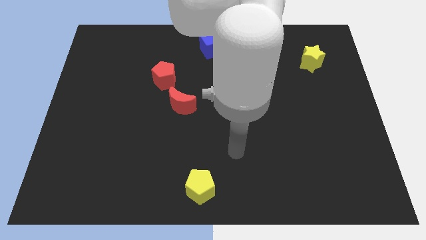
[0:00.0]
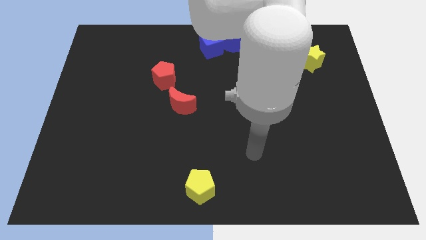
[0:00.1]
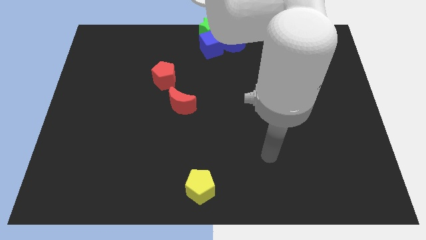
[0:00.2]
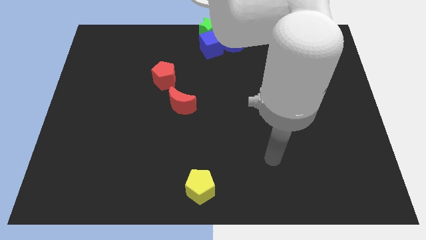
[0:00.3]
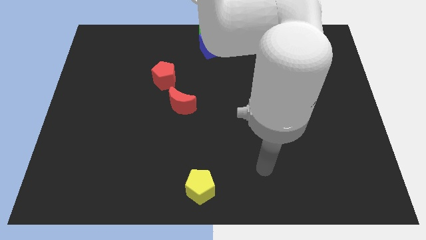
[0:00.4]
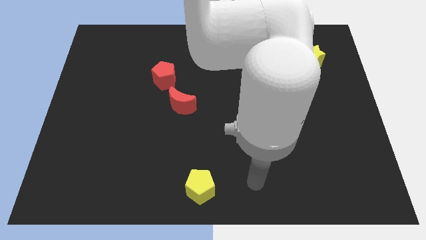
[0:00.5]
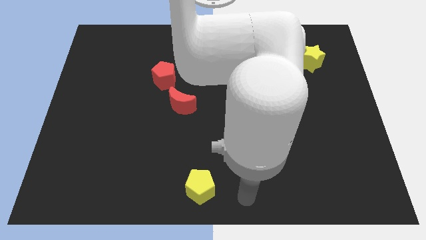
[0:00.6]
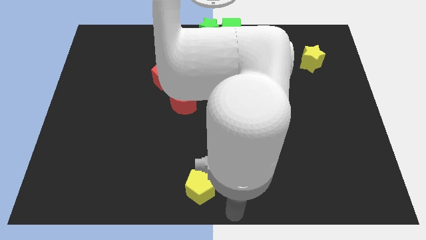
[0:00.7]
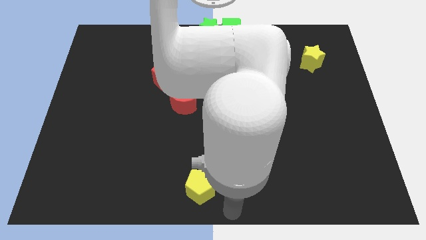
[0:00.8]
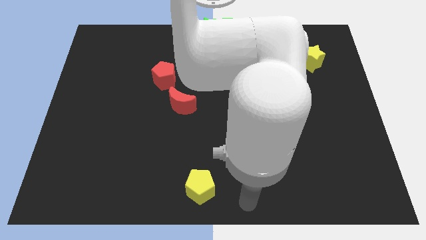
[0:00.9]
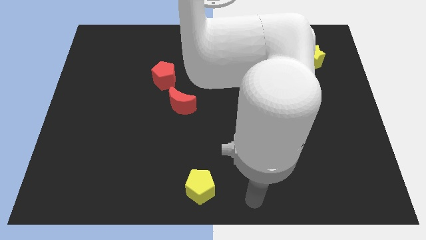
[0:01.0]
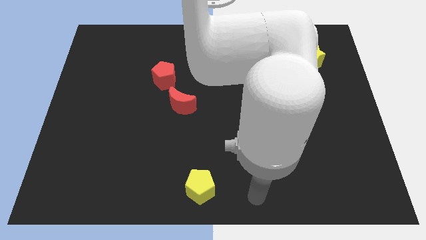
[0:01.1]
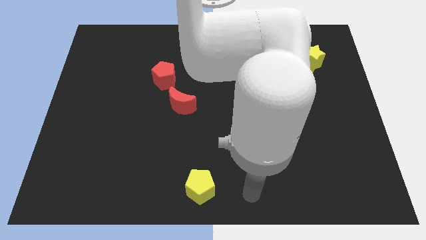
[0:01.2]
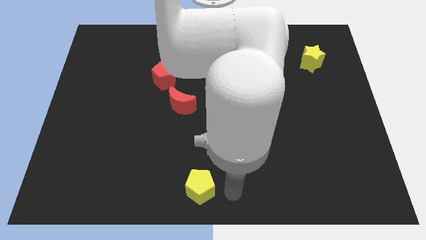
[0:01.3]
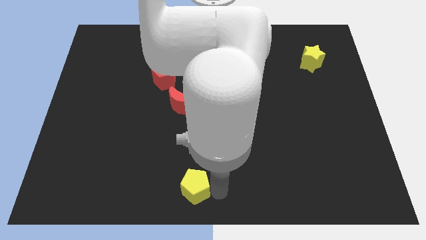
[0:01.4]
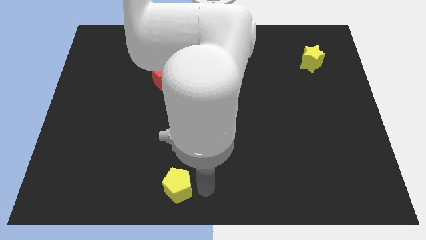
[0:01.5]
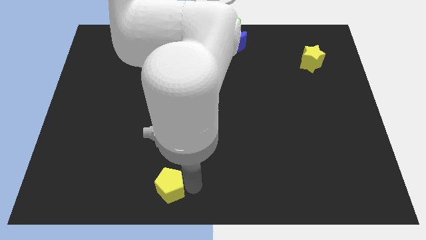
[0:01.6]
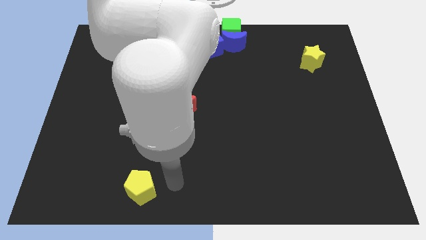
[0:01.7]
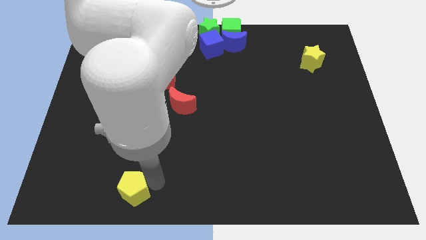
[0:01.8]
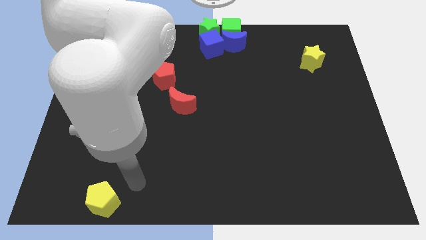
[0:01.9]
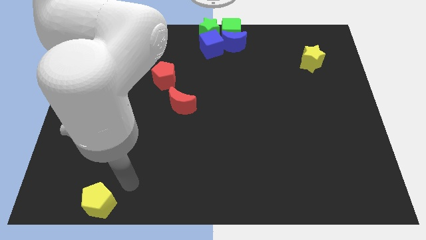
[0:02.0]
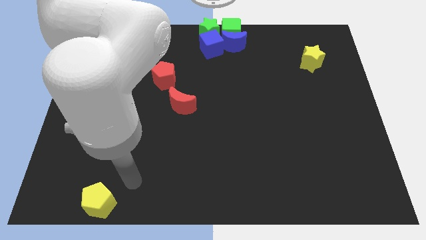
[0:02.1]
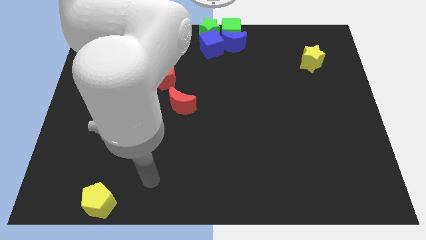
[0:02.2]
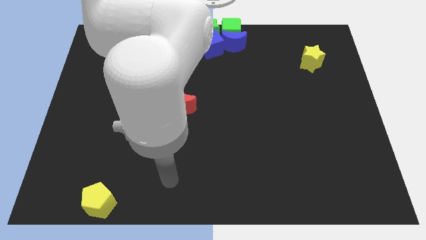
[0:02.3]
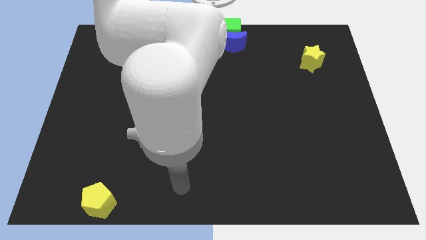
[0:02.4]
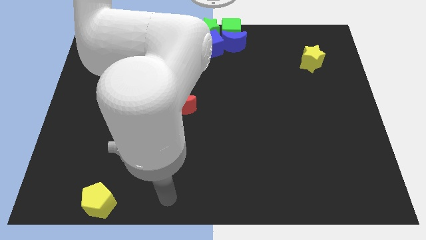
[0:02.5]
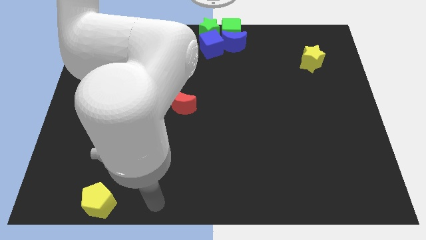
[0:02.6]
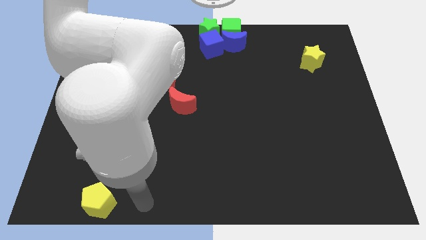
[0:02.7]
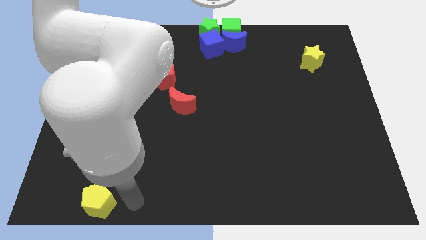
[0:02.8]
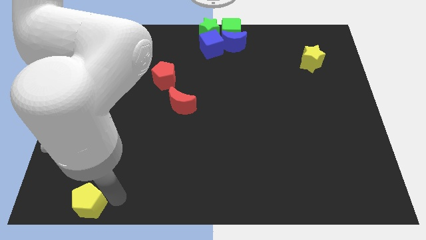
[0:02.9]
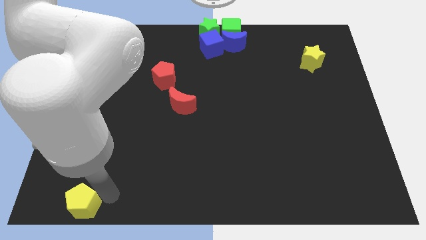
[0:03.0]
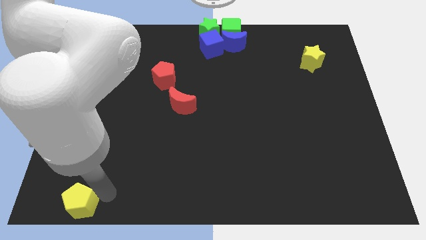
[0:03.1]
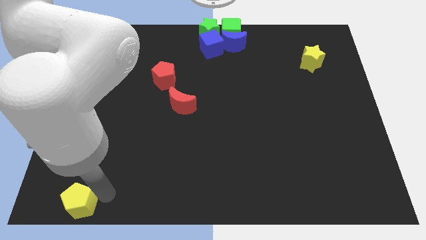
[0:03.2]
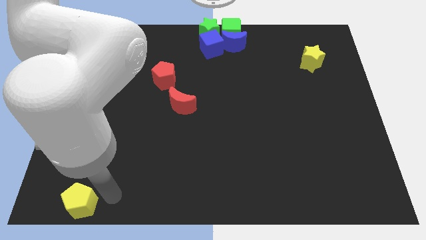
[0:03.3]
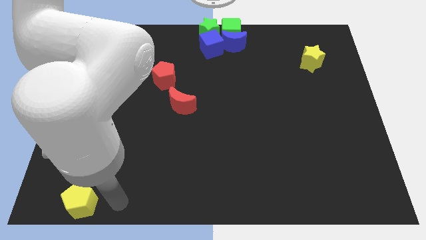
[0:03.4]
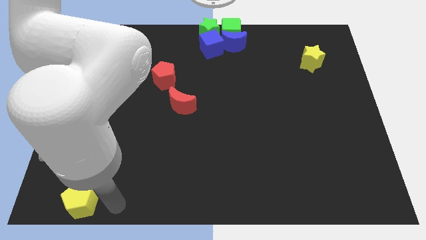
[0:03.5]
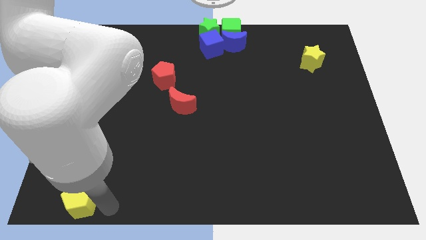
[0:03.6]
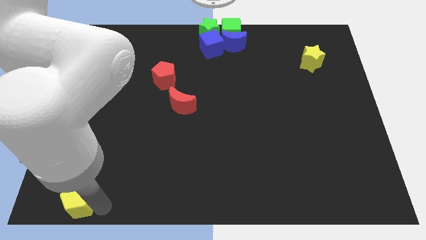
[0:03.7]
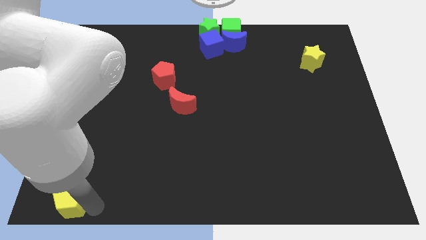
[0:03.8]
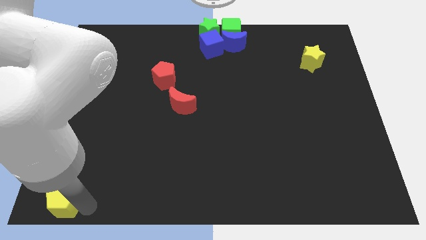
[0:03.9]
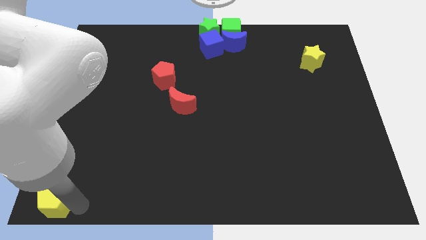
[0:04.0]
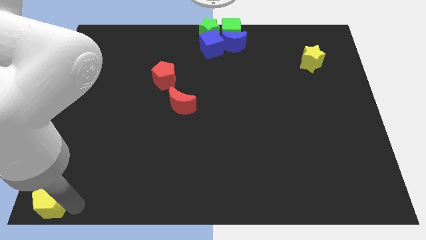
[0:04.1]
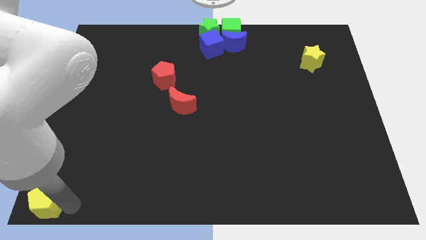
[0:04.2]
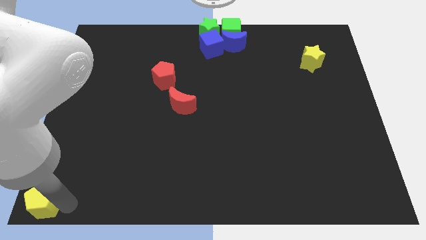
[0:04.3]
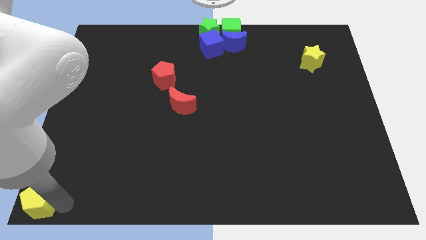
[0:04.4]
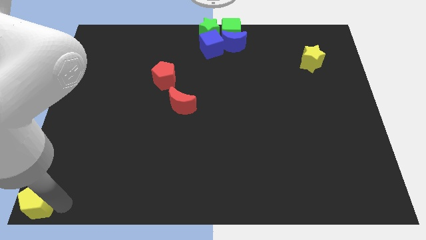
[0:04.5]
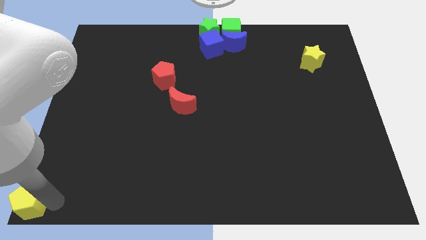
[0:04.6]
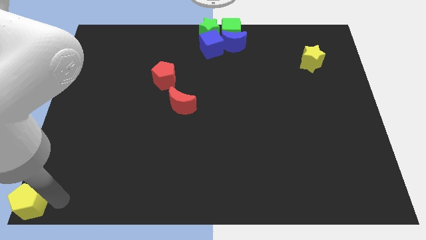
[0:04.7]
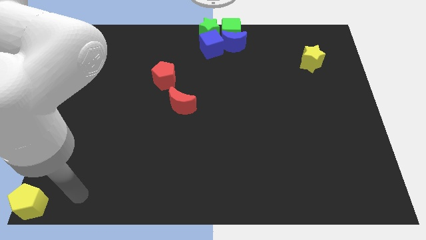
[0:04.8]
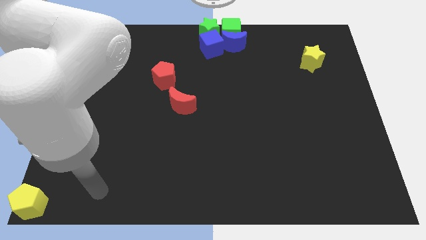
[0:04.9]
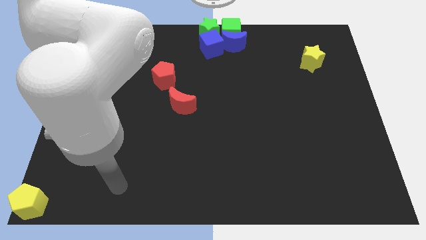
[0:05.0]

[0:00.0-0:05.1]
place the yellow pentagon at the bottom left corner

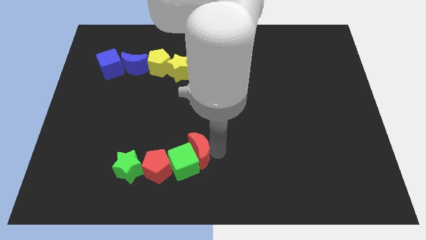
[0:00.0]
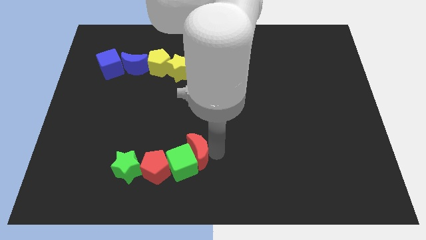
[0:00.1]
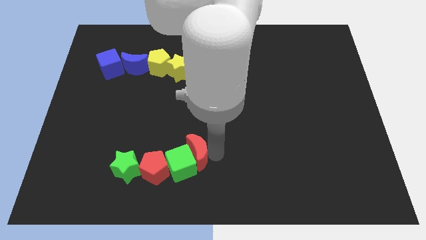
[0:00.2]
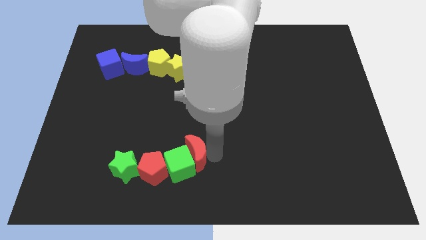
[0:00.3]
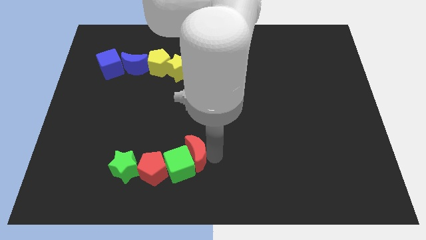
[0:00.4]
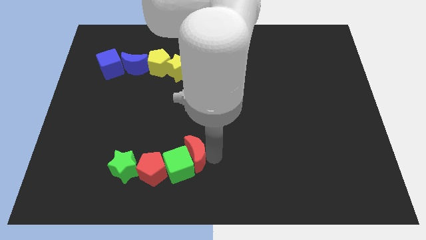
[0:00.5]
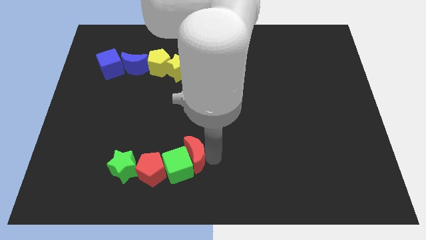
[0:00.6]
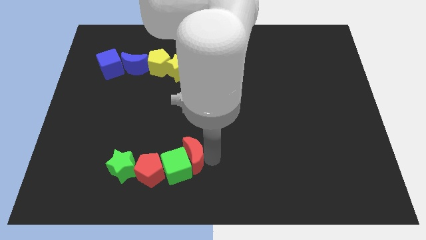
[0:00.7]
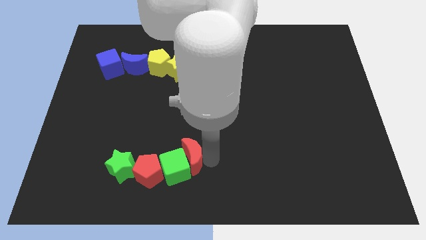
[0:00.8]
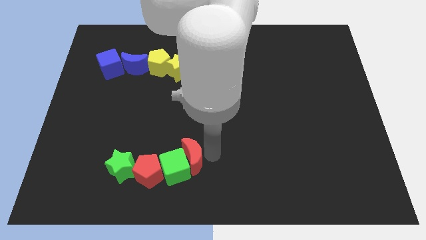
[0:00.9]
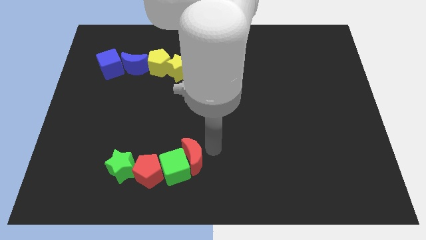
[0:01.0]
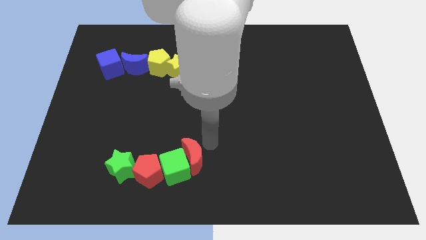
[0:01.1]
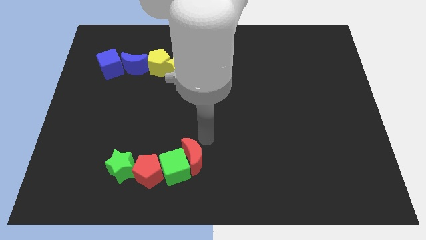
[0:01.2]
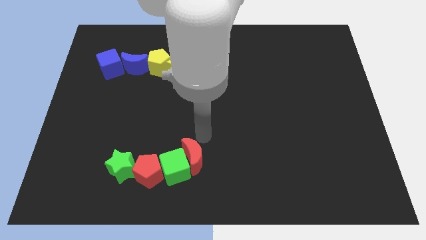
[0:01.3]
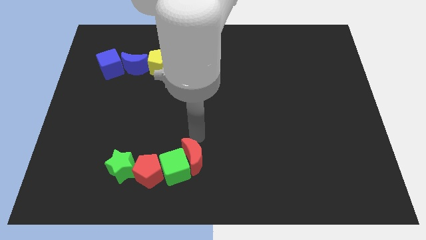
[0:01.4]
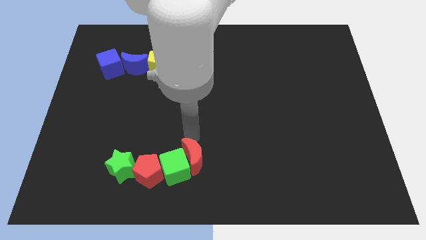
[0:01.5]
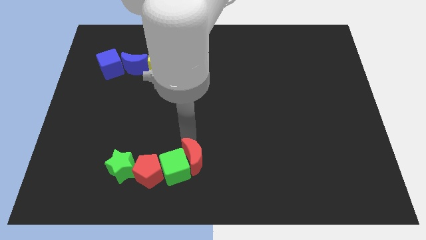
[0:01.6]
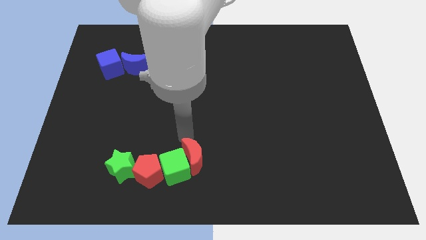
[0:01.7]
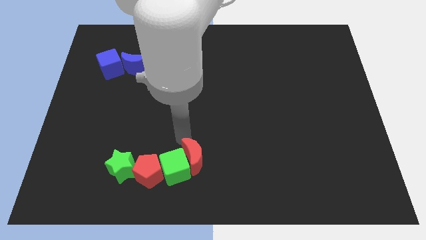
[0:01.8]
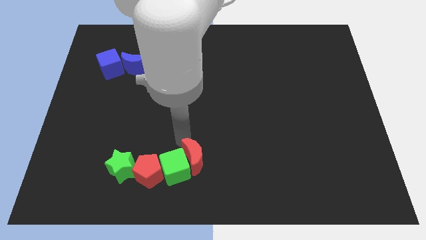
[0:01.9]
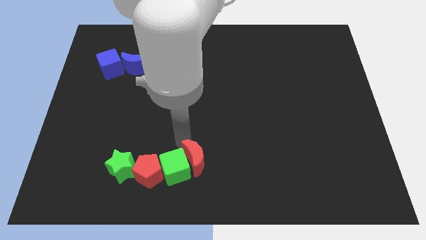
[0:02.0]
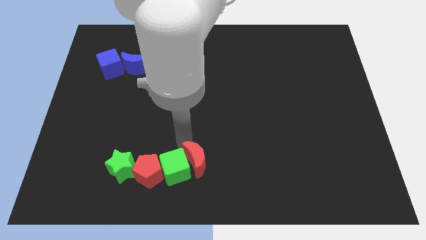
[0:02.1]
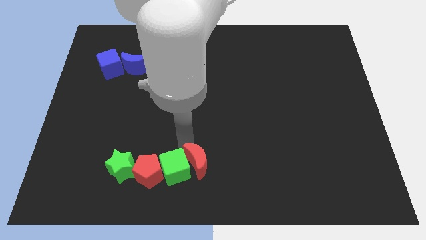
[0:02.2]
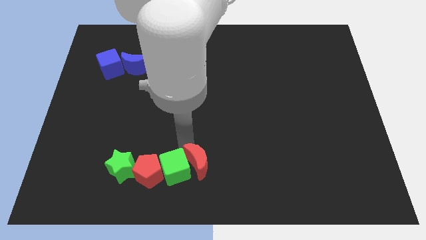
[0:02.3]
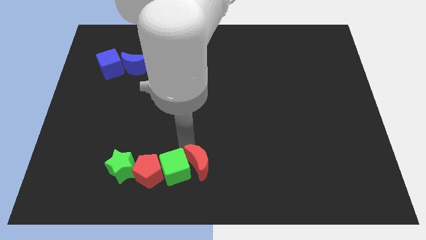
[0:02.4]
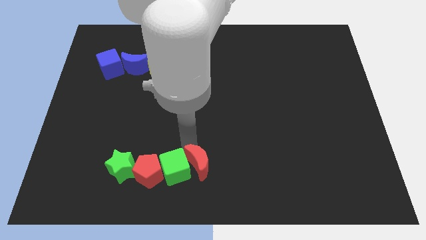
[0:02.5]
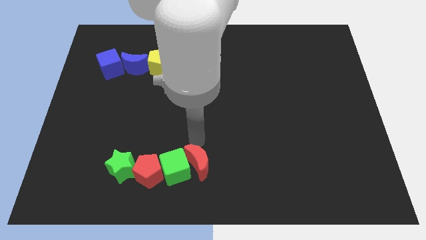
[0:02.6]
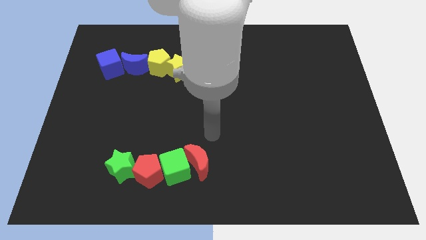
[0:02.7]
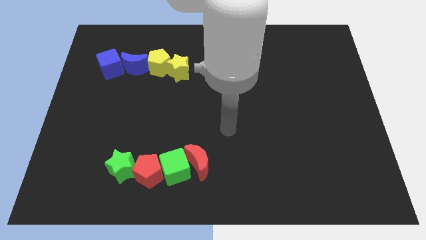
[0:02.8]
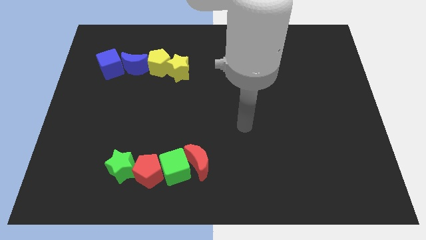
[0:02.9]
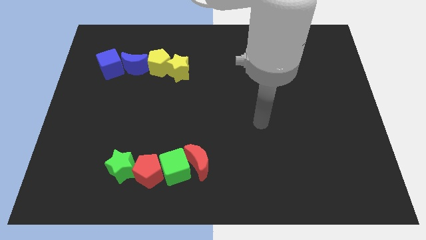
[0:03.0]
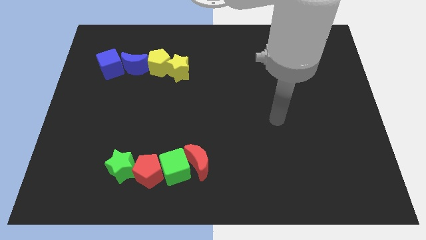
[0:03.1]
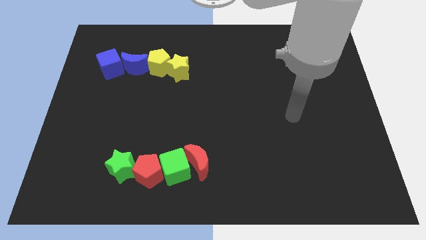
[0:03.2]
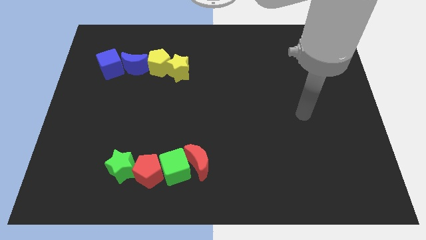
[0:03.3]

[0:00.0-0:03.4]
adjust the red moon to the right side of the green cube

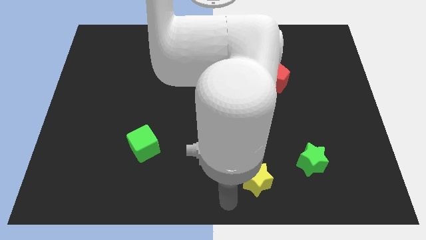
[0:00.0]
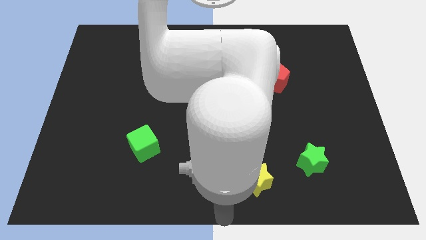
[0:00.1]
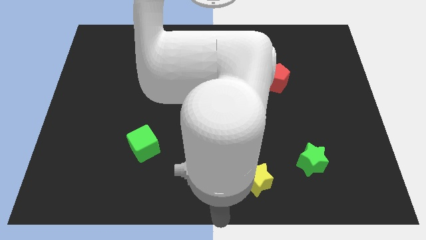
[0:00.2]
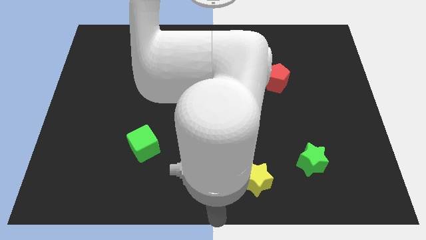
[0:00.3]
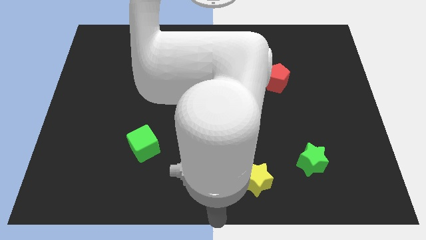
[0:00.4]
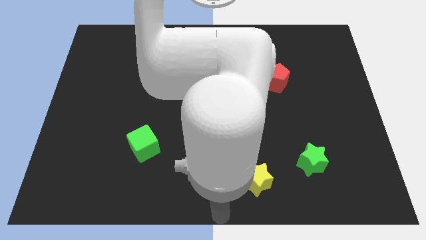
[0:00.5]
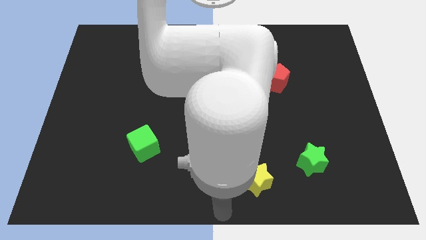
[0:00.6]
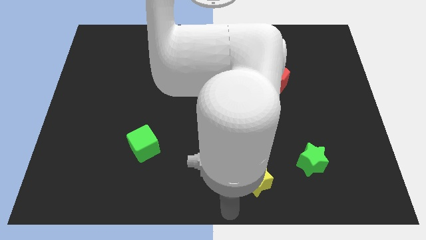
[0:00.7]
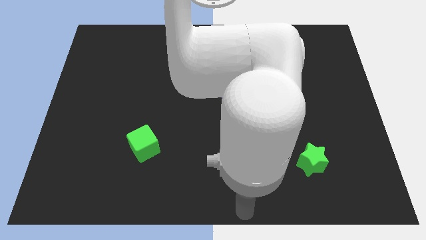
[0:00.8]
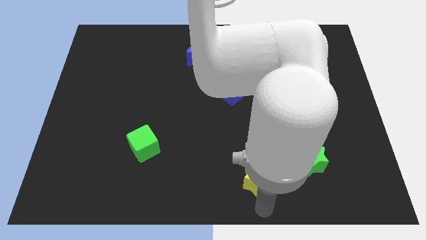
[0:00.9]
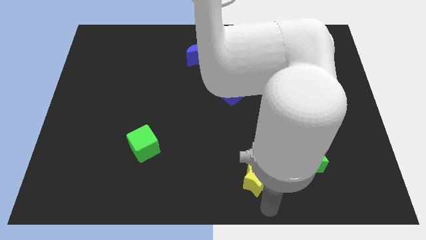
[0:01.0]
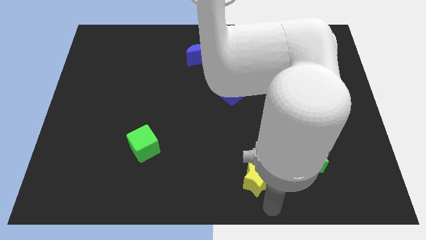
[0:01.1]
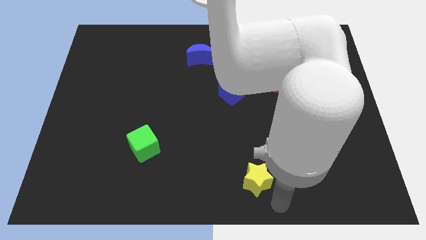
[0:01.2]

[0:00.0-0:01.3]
point your arm at the bottom right side of yellow star
